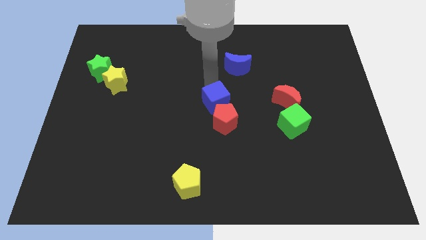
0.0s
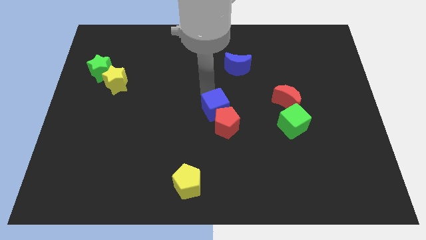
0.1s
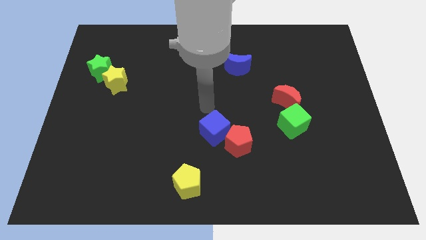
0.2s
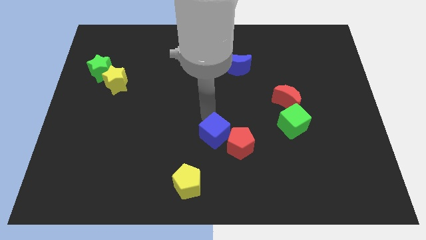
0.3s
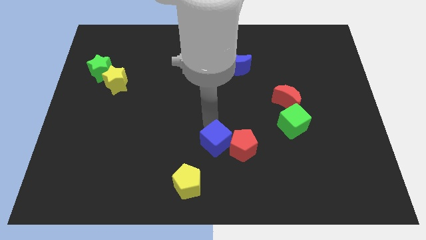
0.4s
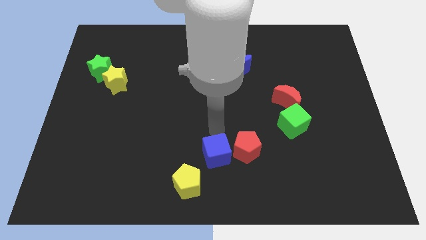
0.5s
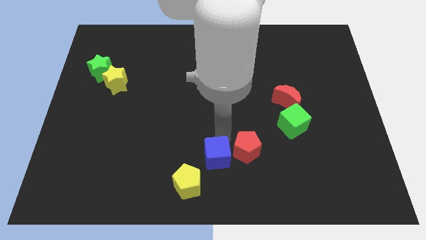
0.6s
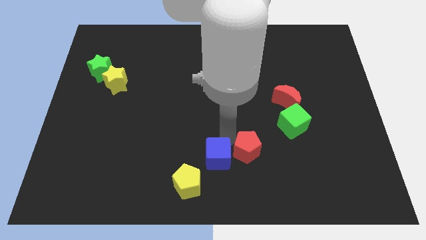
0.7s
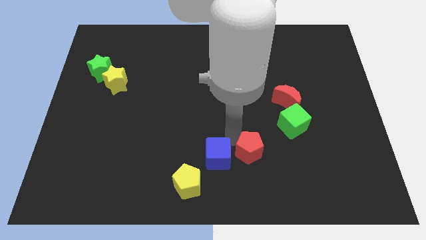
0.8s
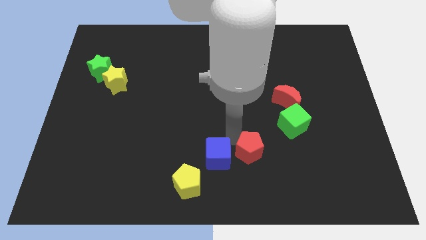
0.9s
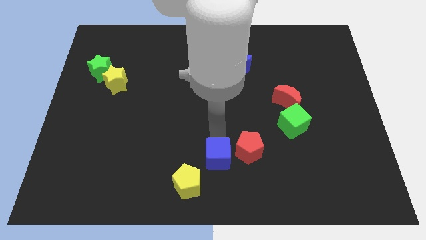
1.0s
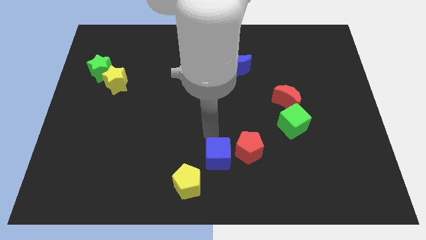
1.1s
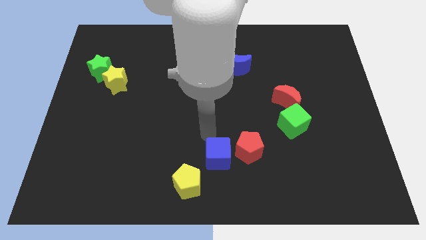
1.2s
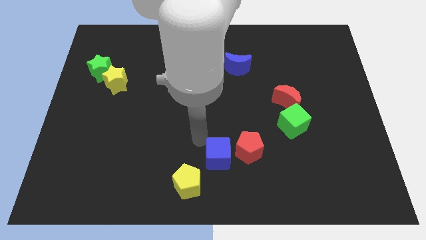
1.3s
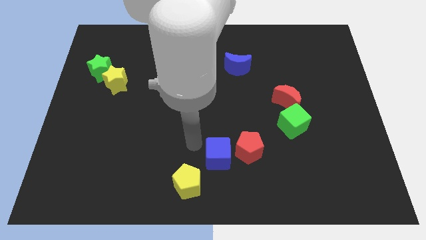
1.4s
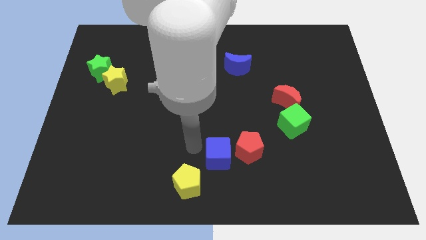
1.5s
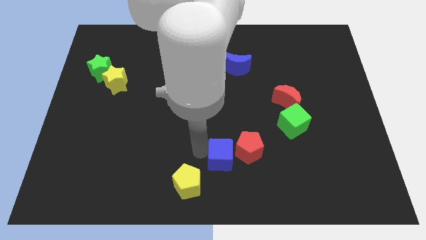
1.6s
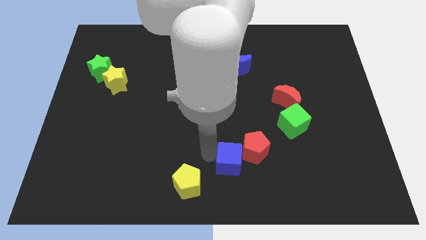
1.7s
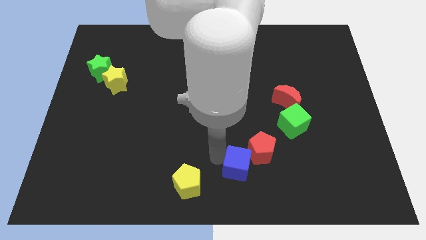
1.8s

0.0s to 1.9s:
push blue cube red pentagon towards bottom of the board

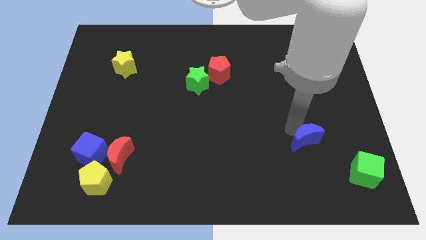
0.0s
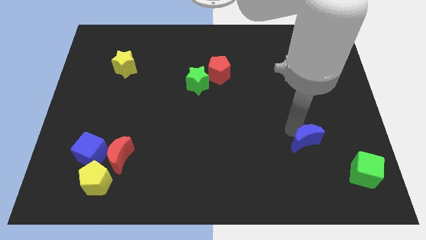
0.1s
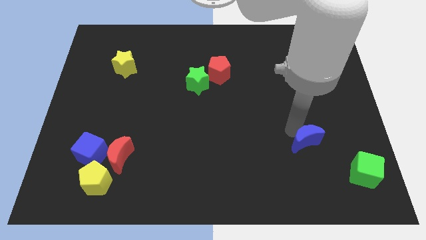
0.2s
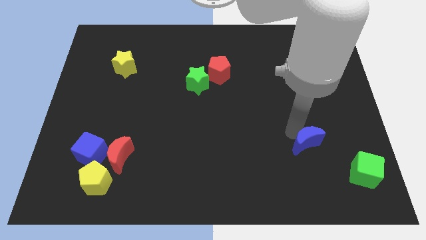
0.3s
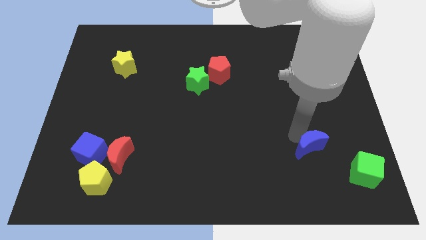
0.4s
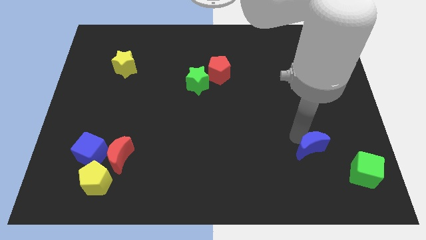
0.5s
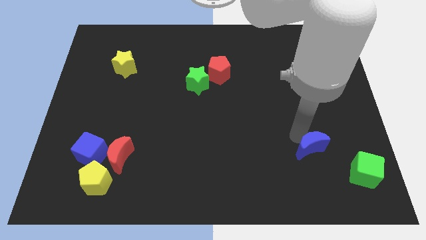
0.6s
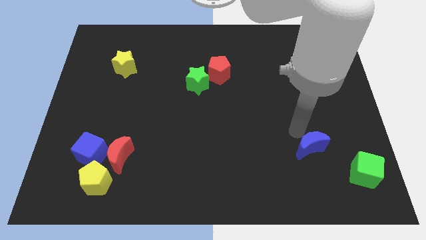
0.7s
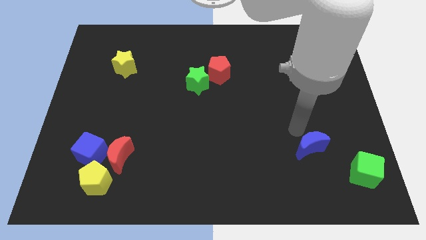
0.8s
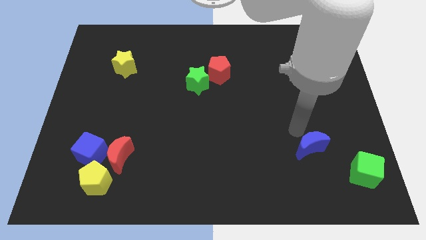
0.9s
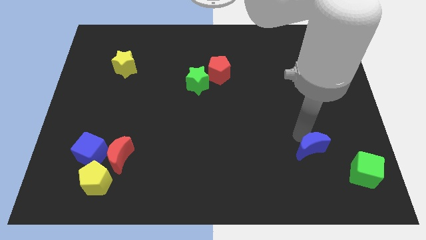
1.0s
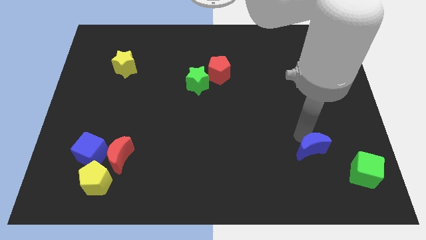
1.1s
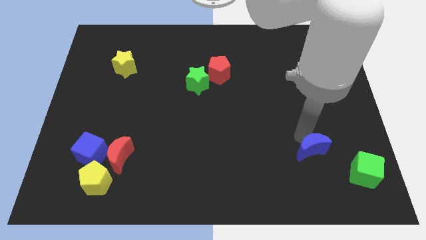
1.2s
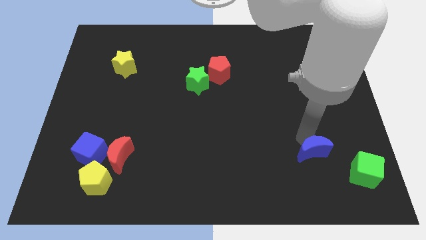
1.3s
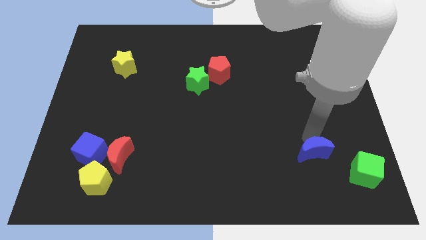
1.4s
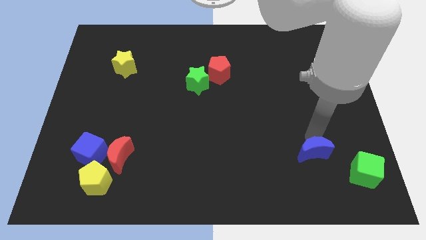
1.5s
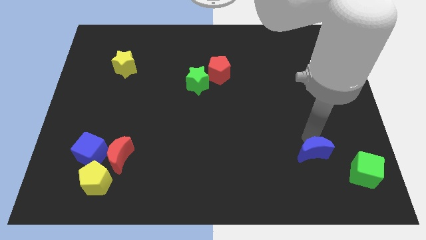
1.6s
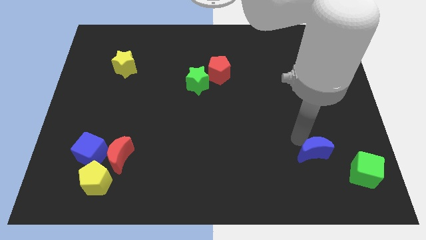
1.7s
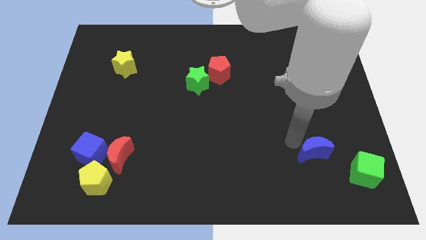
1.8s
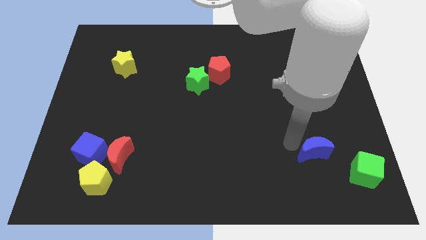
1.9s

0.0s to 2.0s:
move the blue crescent towards the green cube

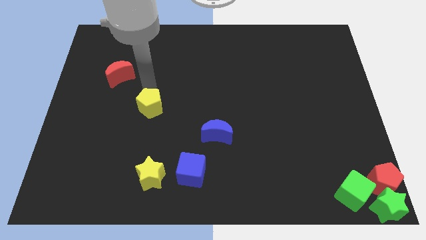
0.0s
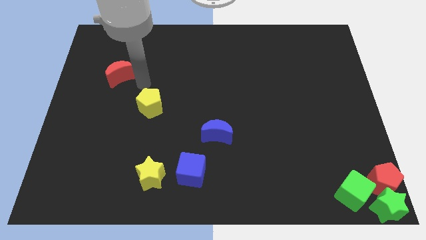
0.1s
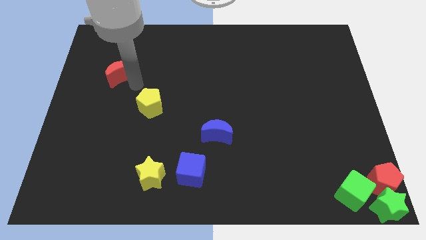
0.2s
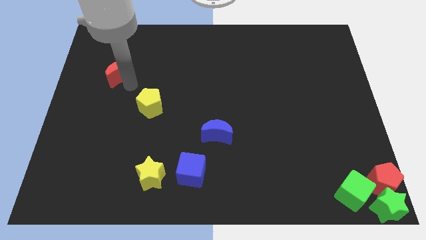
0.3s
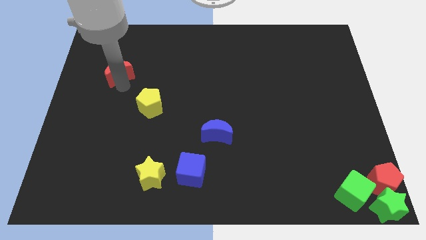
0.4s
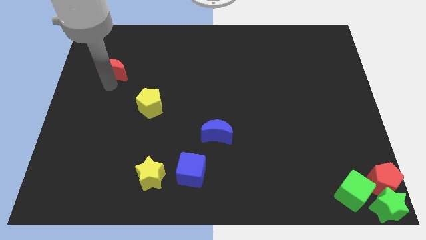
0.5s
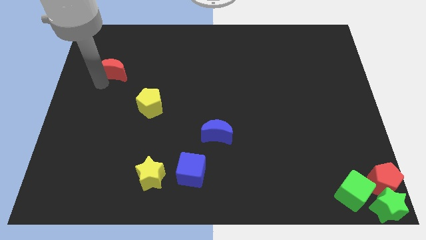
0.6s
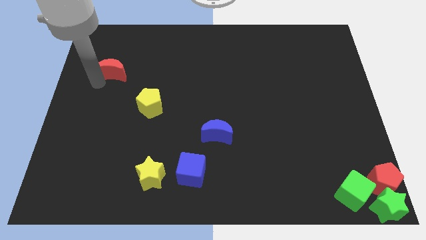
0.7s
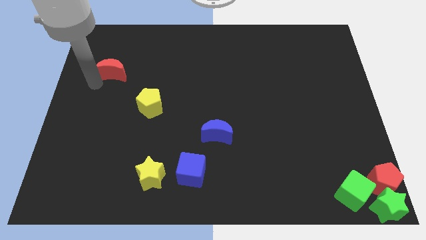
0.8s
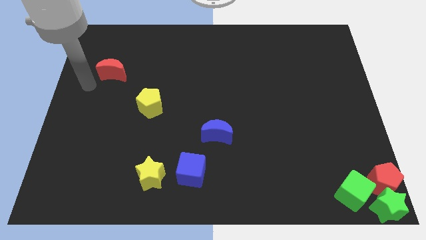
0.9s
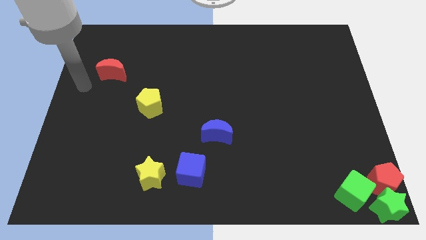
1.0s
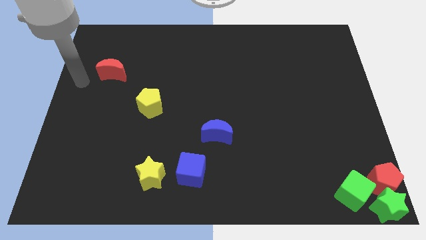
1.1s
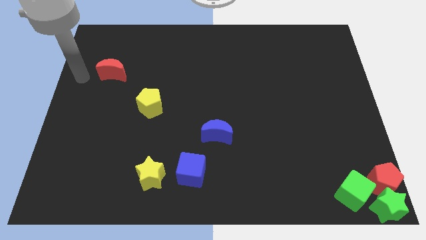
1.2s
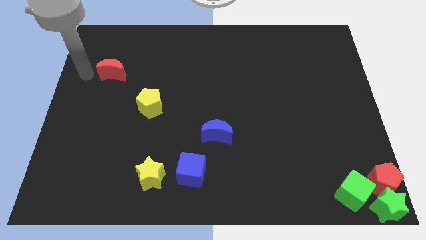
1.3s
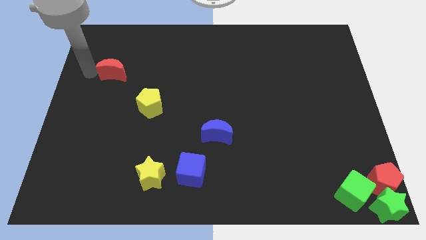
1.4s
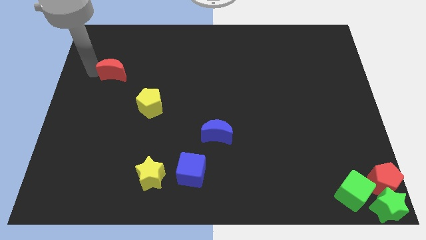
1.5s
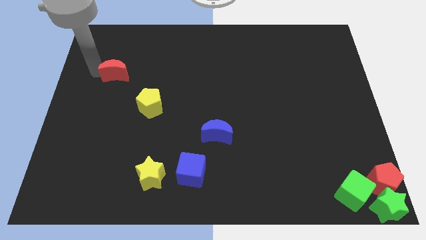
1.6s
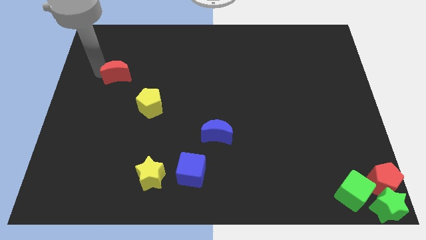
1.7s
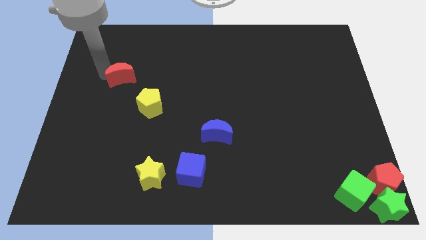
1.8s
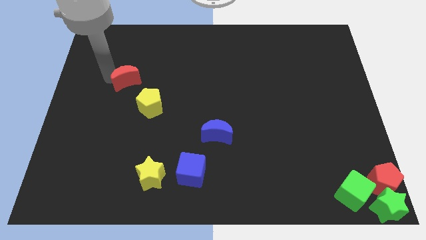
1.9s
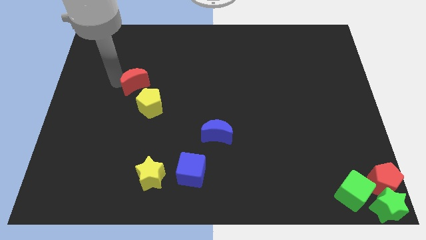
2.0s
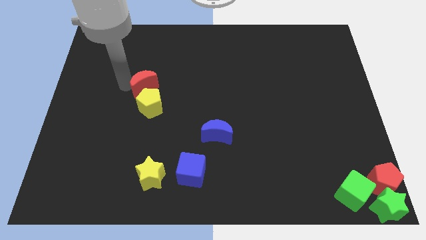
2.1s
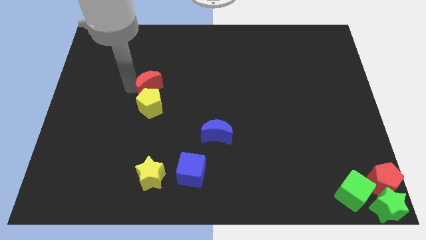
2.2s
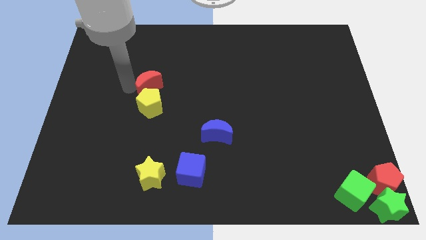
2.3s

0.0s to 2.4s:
push the red crescent over the yellow pentagon

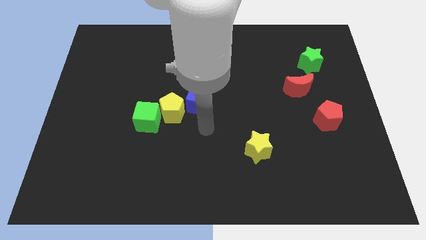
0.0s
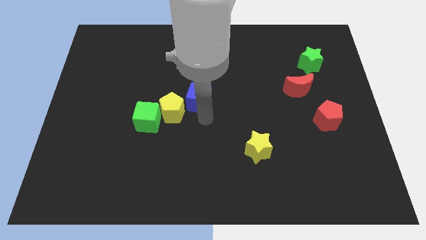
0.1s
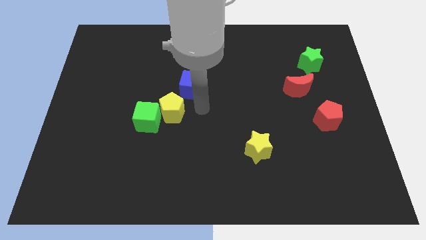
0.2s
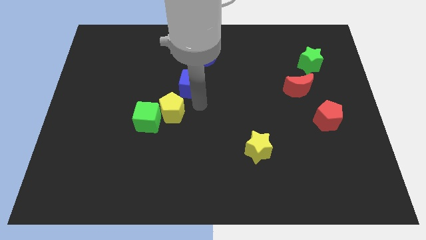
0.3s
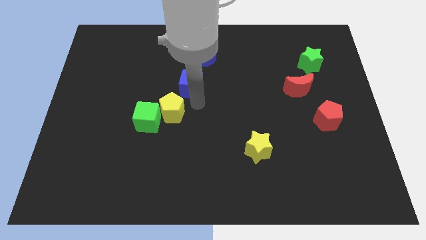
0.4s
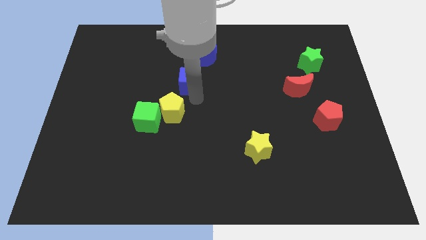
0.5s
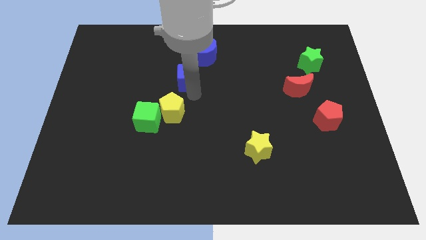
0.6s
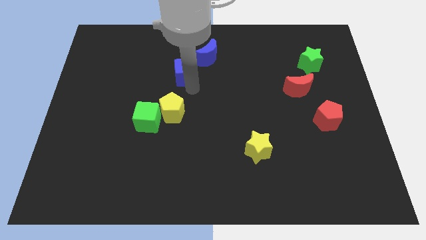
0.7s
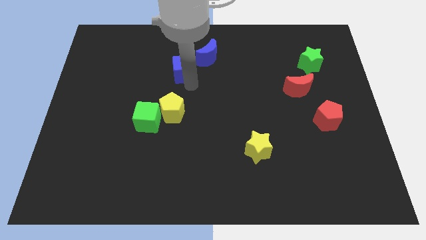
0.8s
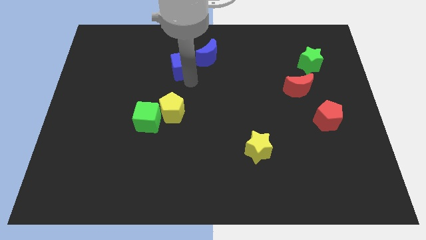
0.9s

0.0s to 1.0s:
push the blue cube to the top of the yellow pentagon

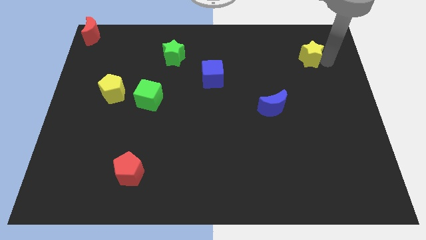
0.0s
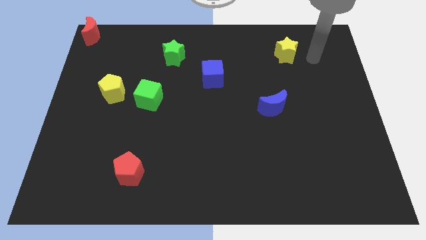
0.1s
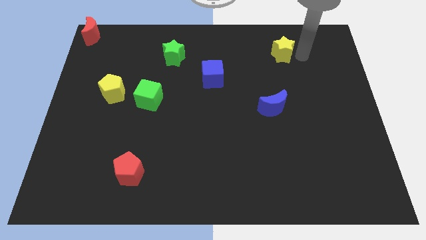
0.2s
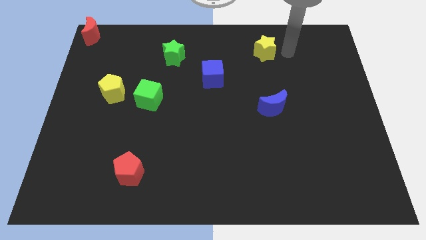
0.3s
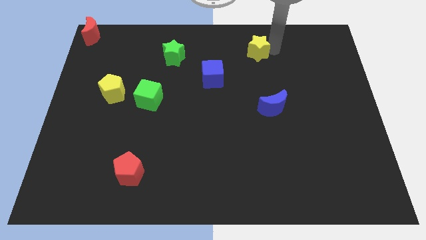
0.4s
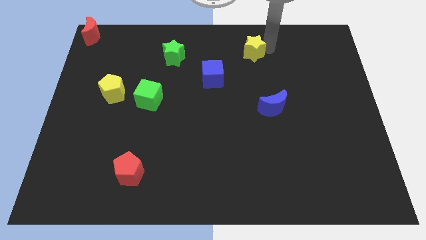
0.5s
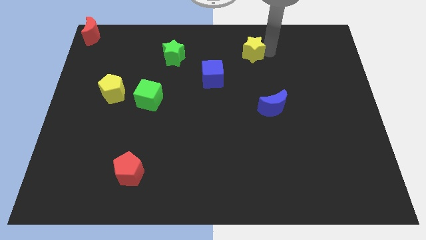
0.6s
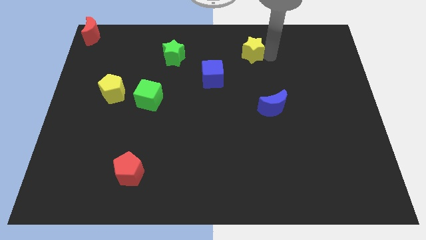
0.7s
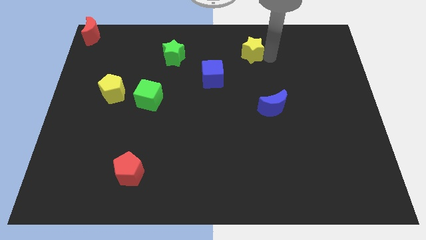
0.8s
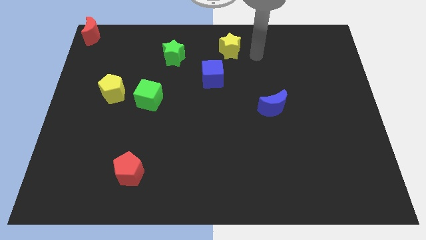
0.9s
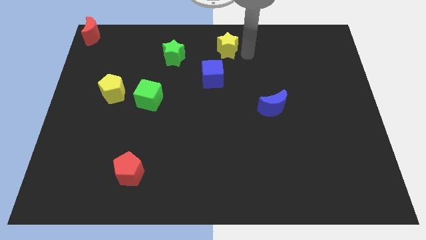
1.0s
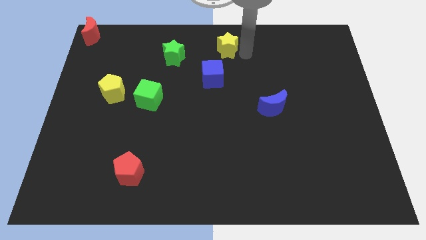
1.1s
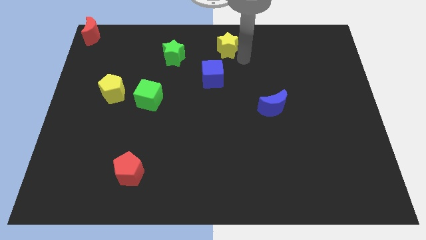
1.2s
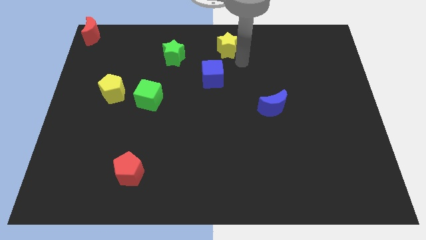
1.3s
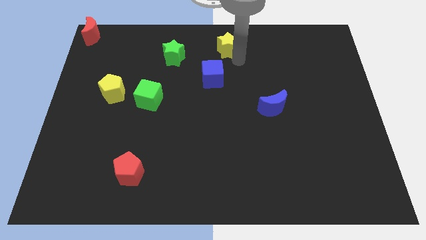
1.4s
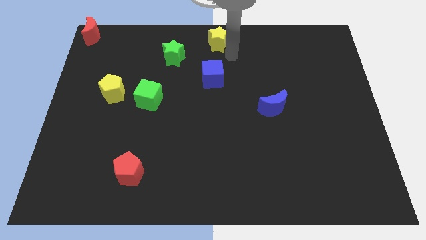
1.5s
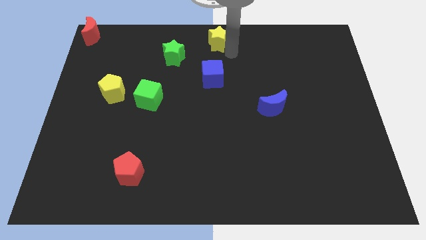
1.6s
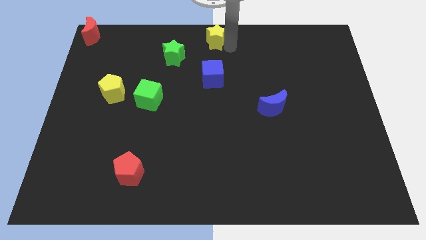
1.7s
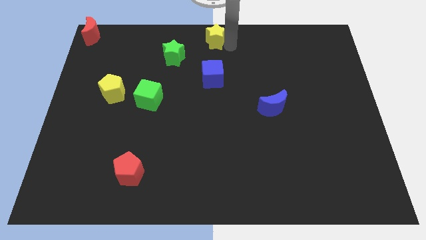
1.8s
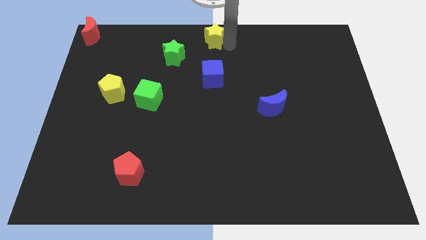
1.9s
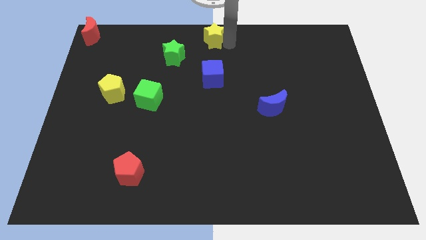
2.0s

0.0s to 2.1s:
move the yellow star to the top center
